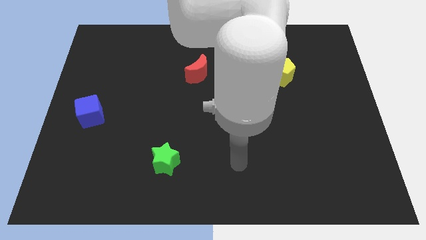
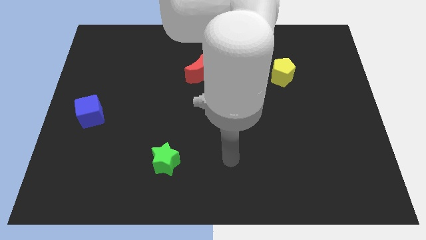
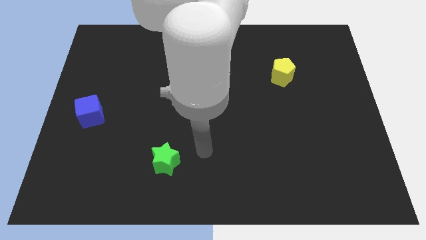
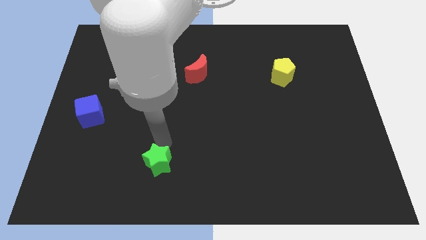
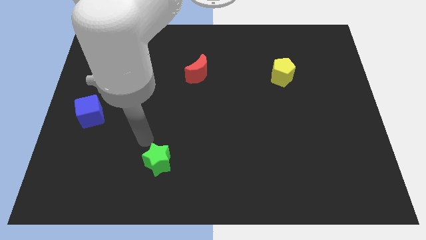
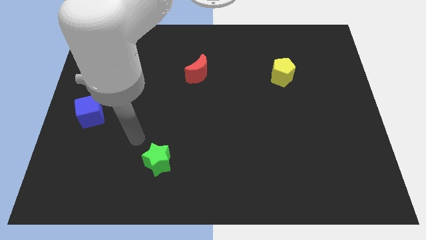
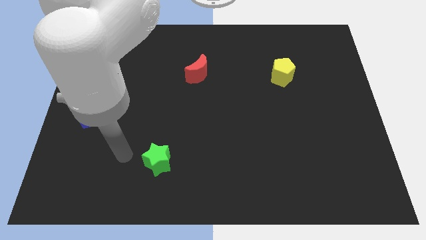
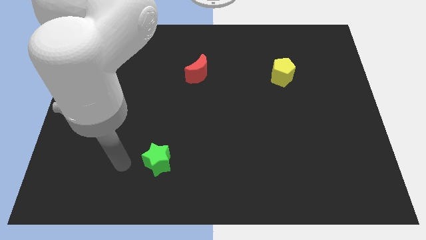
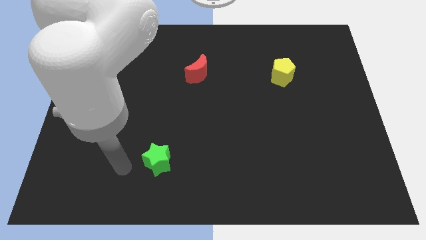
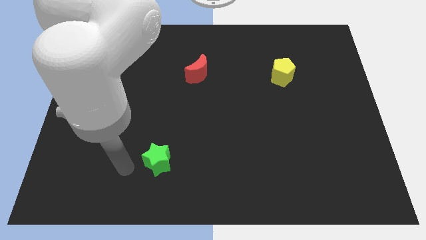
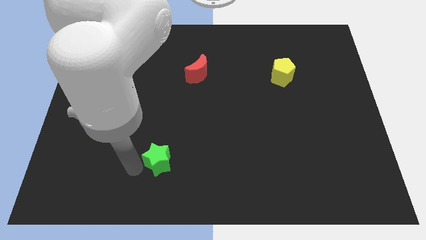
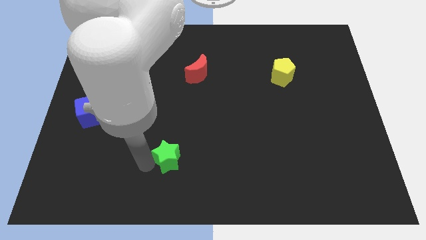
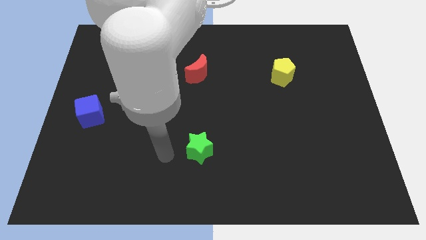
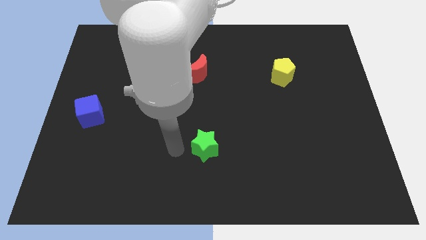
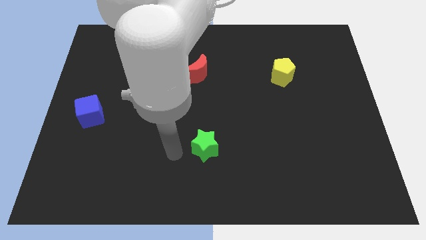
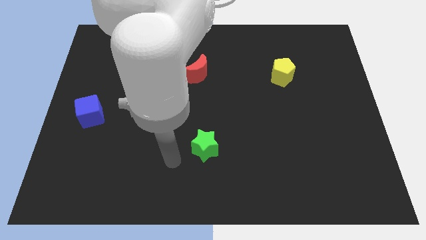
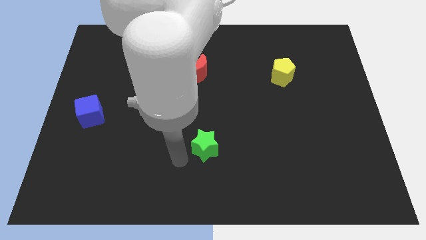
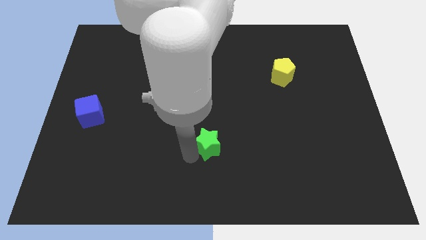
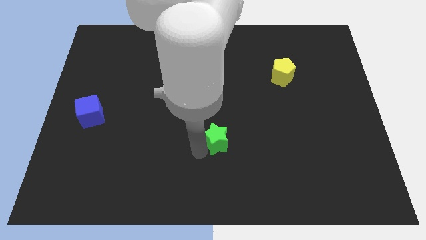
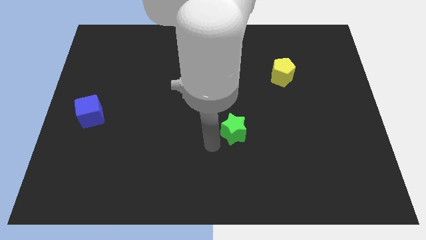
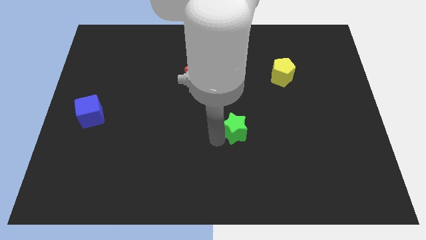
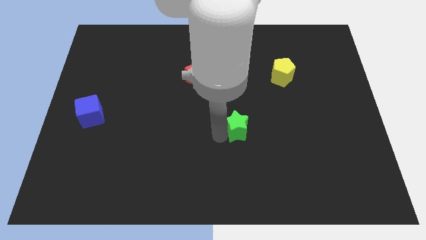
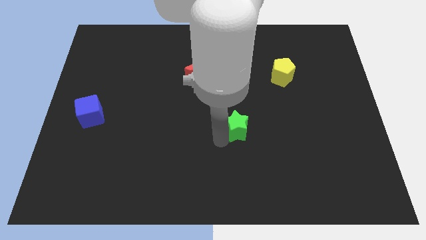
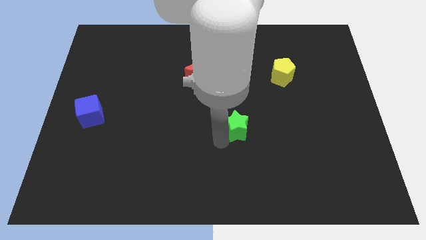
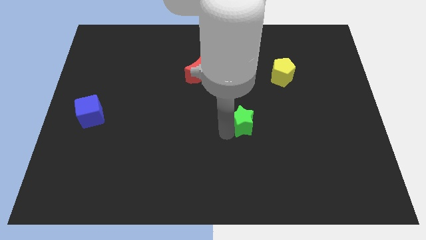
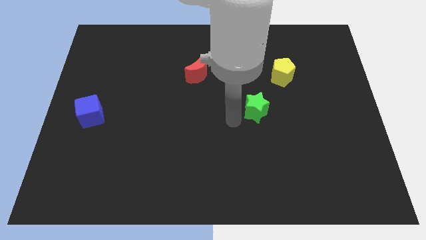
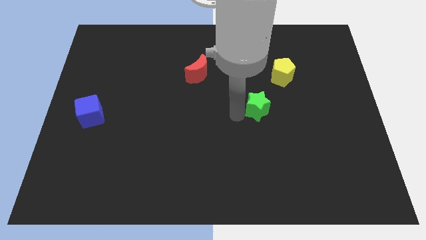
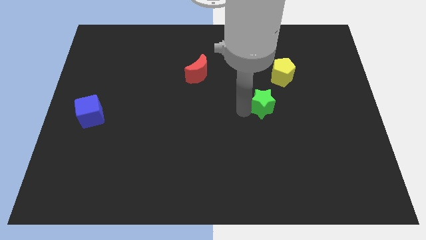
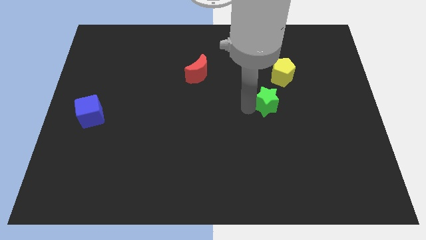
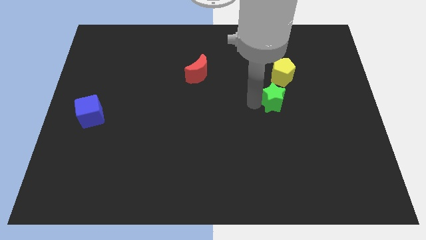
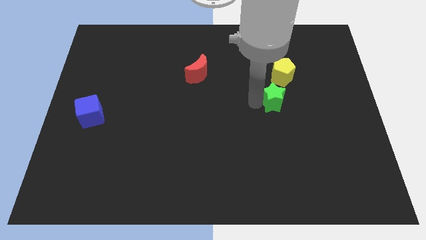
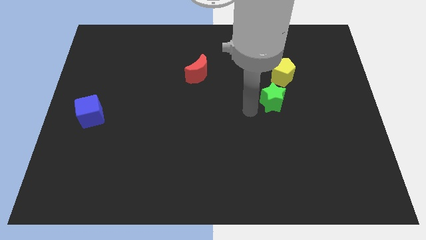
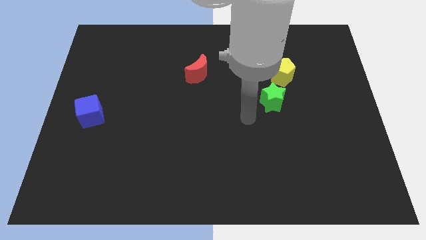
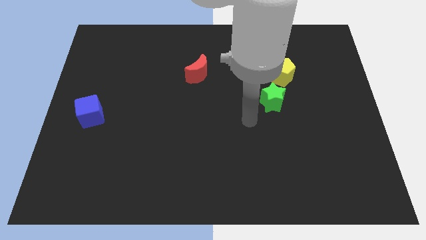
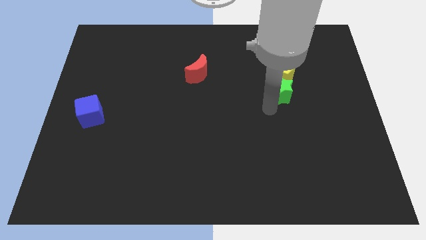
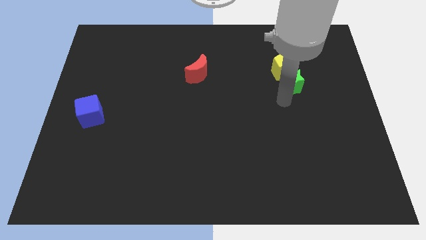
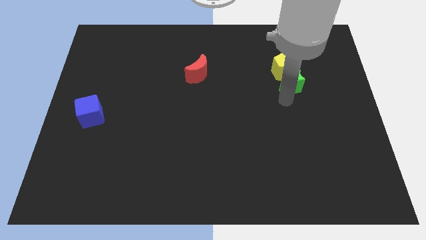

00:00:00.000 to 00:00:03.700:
slide the green star to the yellow pentagon

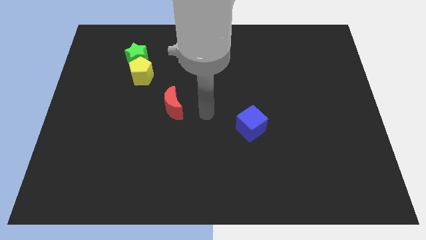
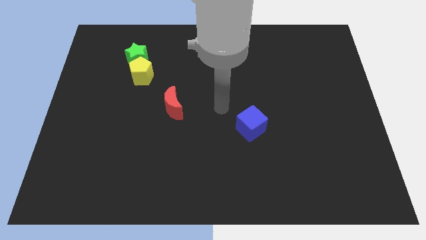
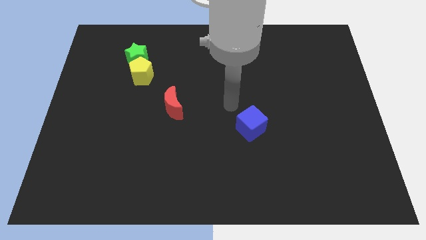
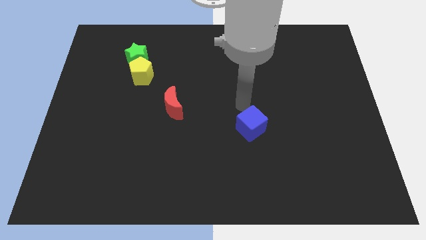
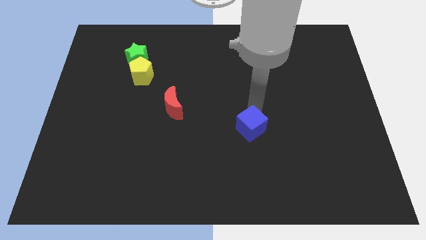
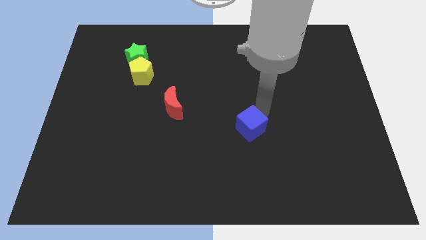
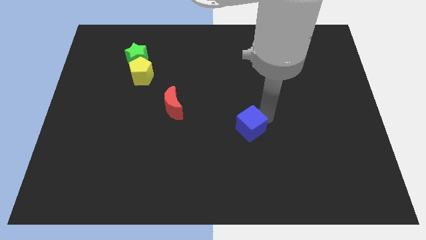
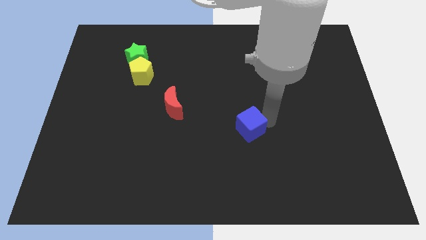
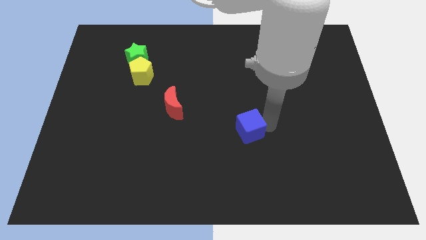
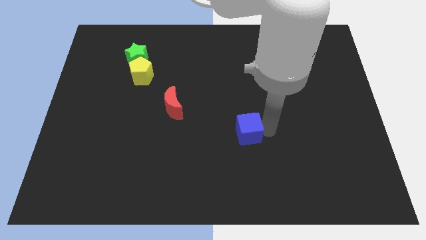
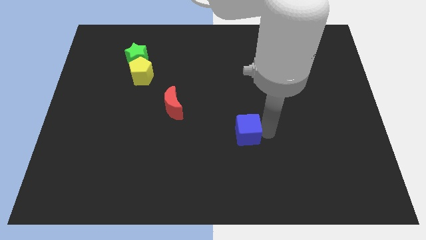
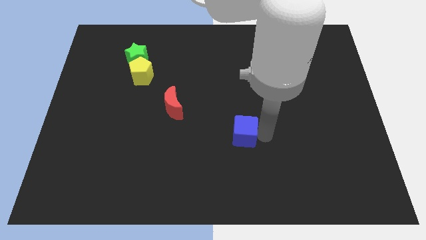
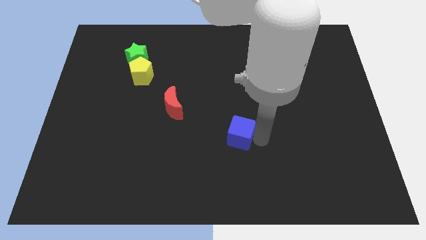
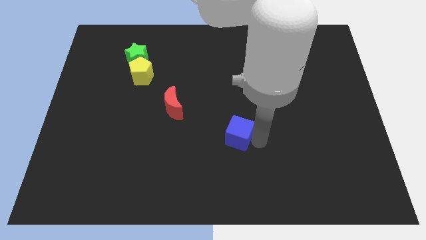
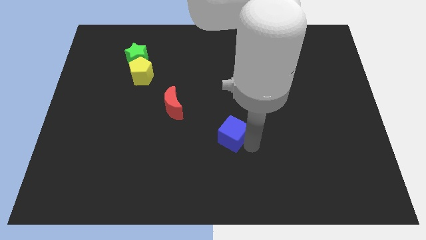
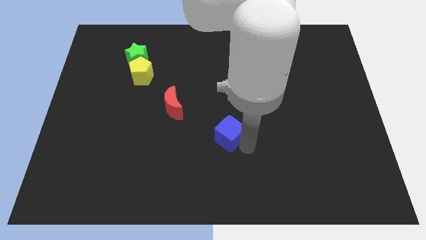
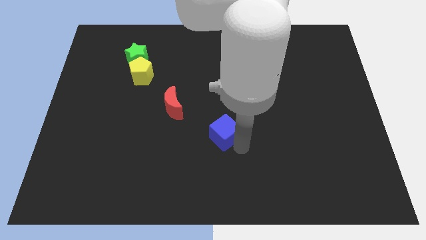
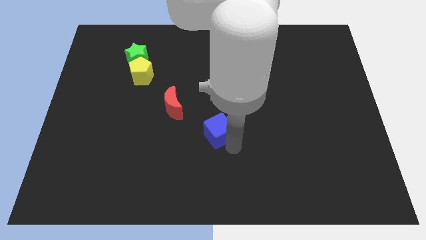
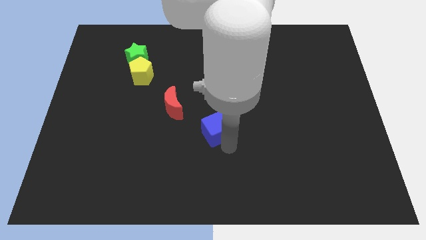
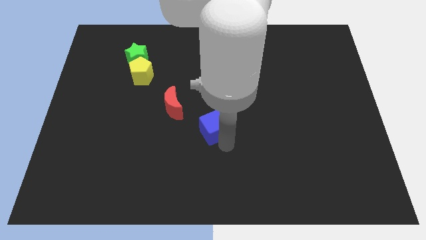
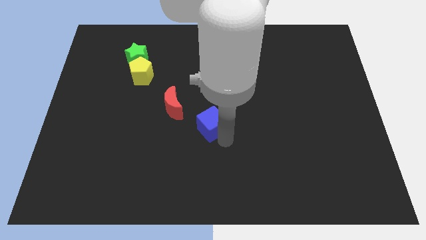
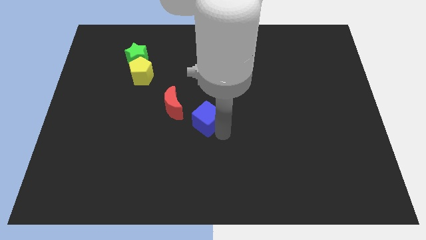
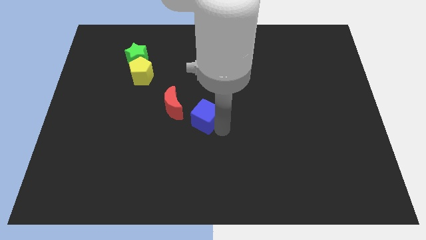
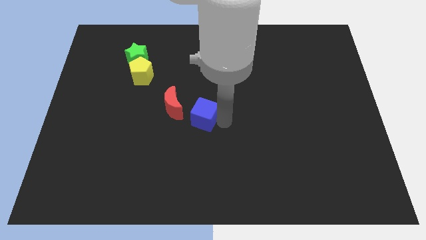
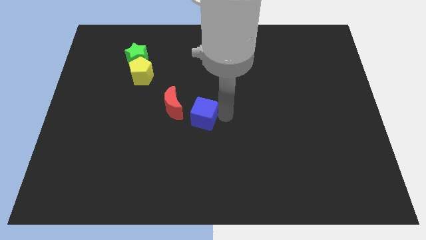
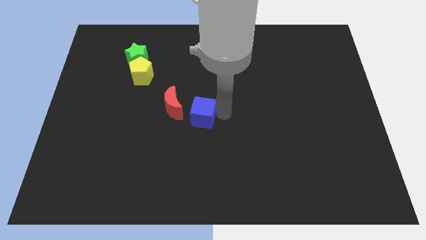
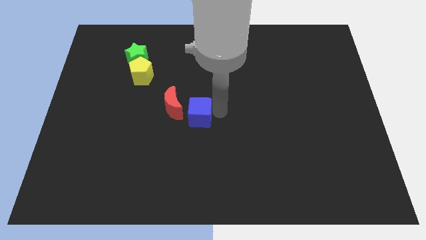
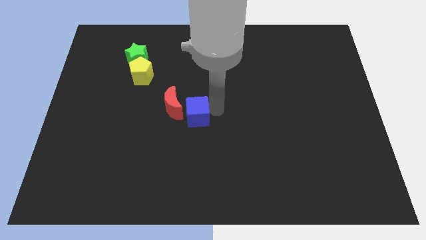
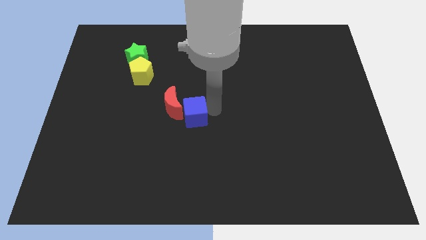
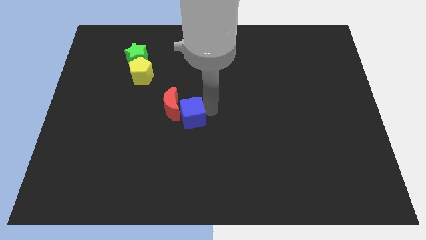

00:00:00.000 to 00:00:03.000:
put the blue cube close to the red moon

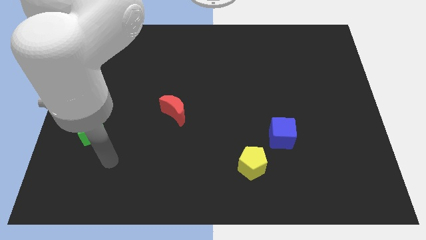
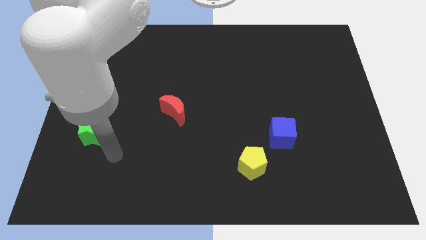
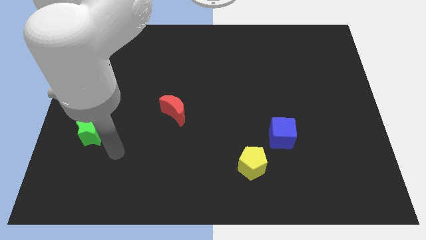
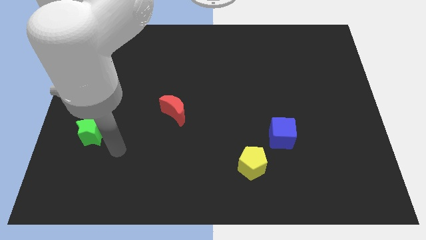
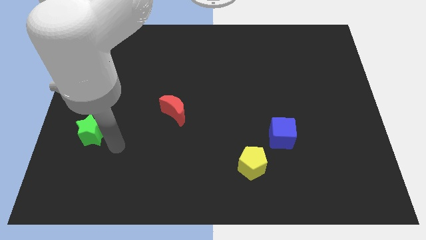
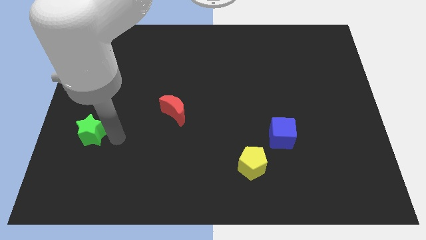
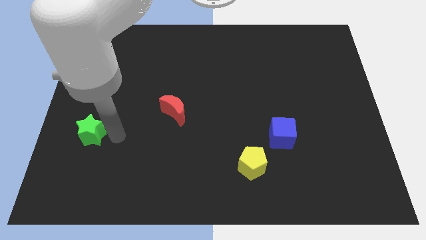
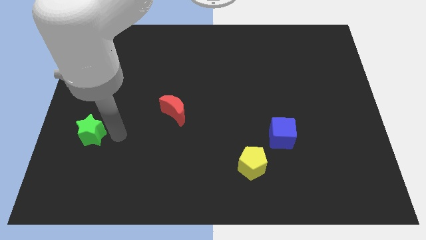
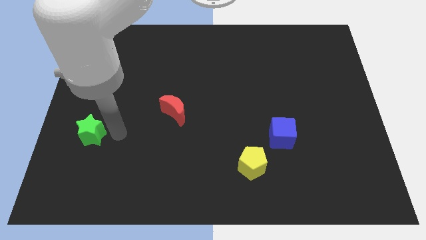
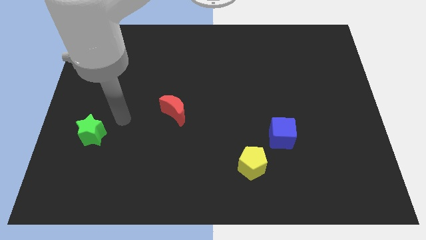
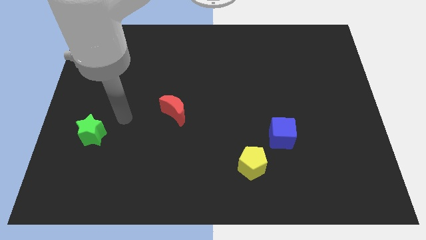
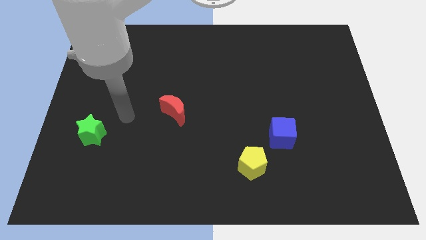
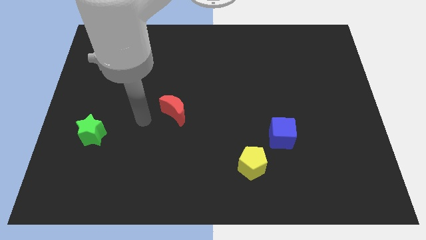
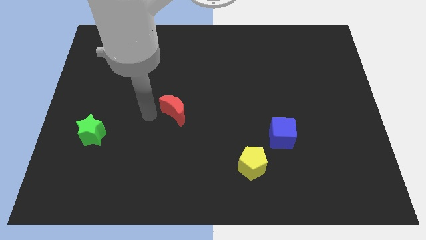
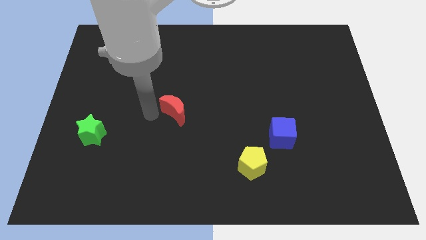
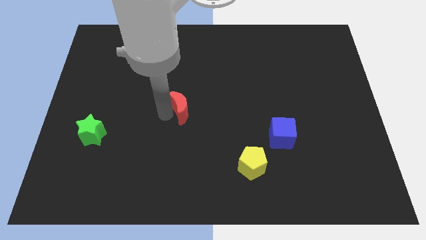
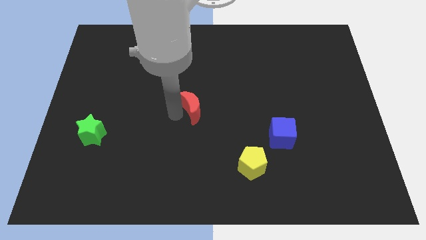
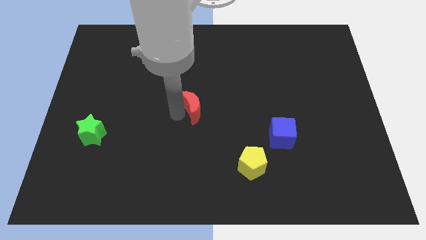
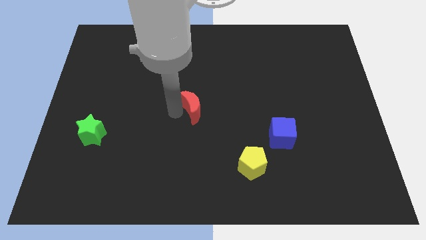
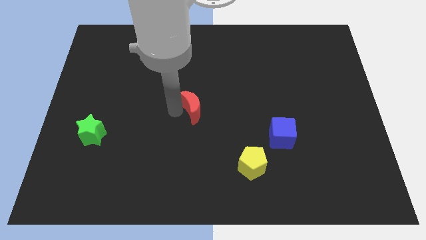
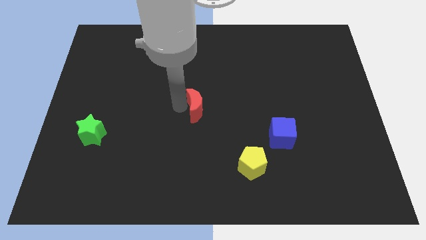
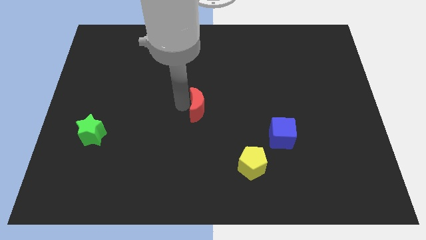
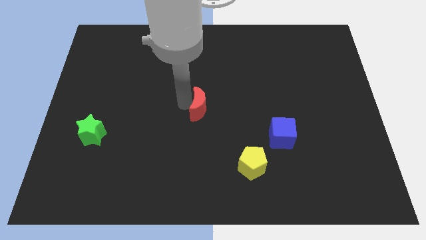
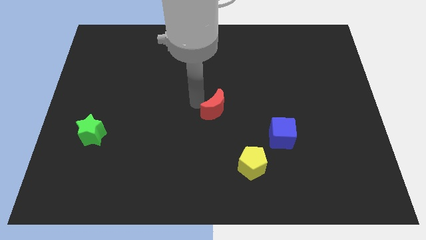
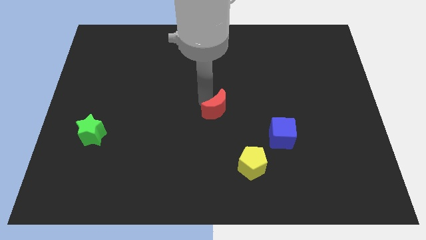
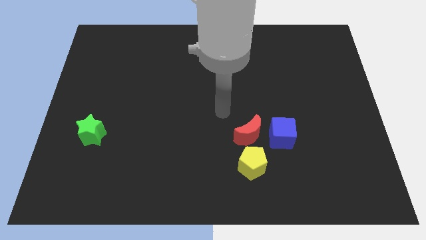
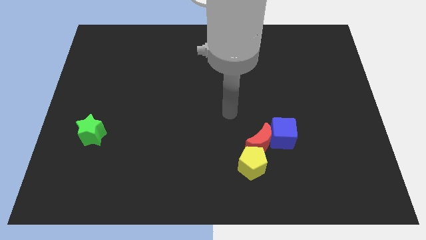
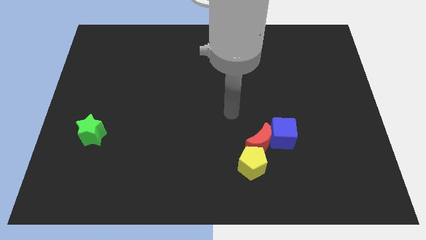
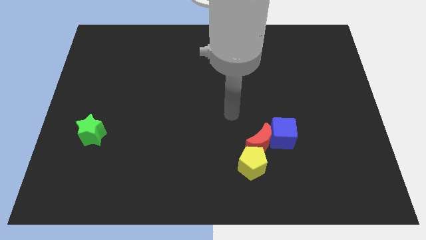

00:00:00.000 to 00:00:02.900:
push the red block next to the blue block
